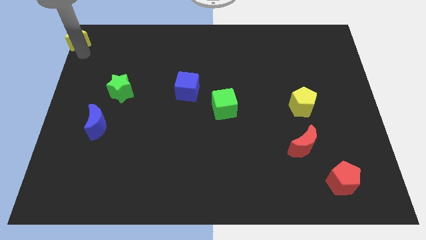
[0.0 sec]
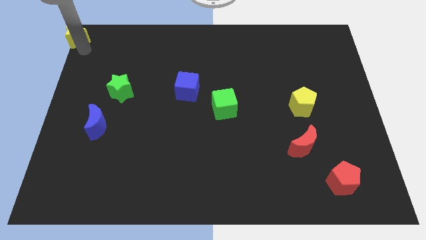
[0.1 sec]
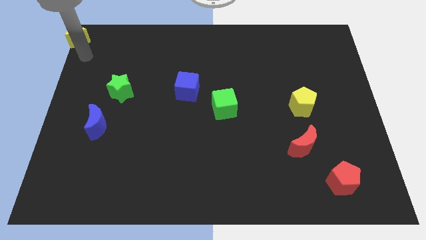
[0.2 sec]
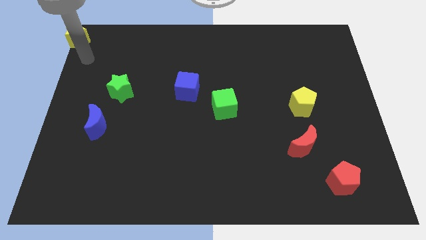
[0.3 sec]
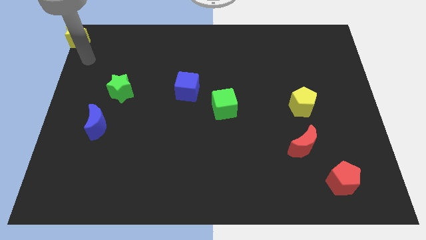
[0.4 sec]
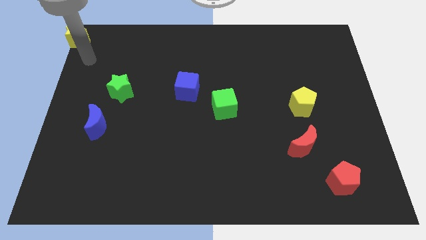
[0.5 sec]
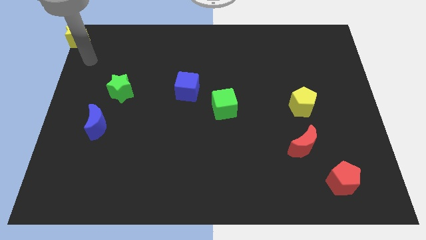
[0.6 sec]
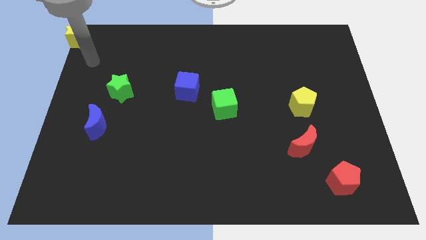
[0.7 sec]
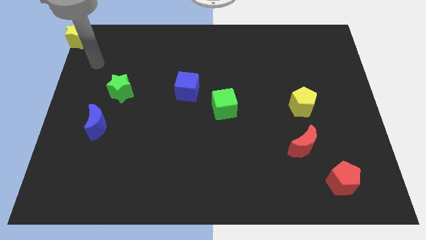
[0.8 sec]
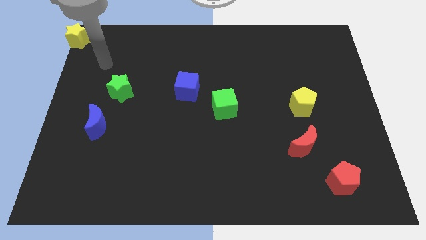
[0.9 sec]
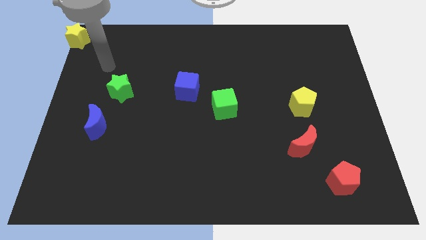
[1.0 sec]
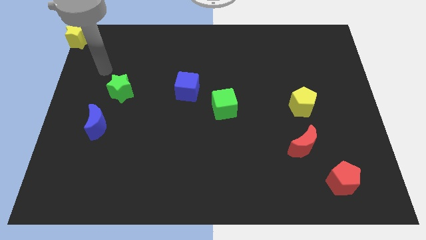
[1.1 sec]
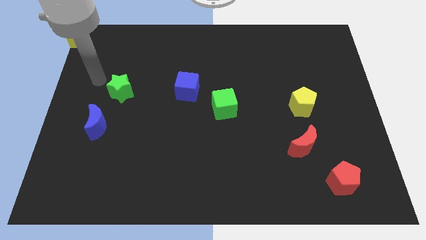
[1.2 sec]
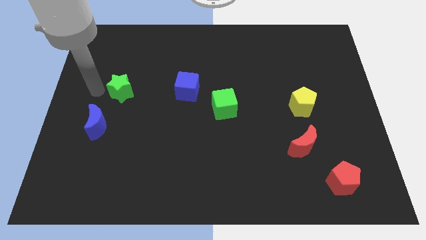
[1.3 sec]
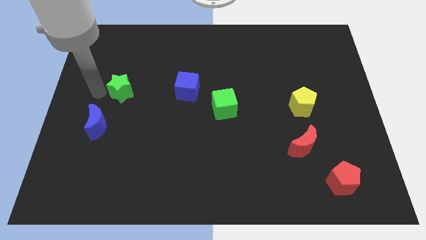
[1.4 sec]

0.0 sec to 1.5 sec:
move your arm away from the yellow star

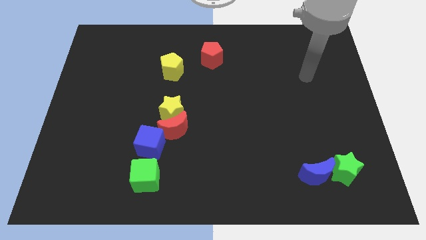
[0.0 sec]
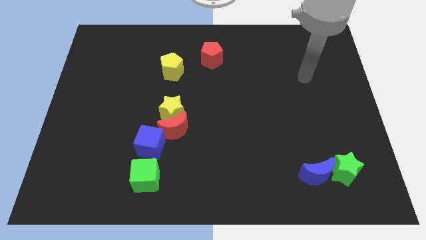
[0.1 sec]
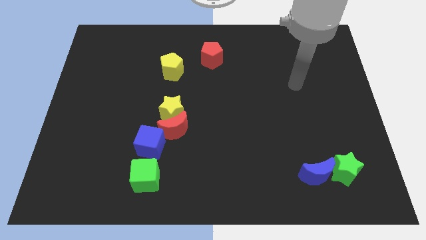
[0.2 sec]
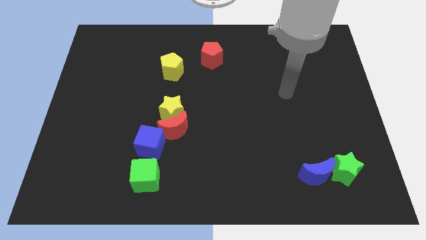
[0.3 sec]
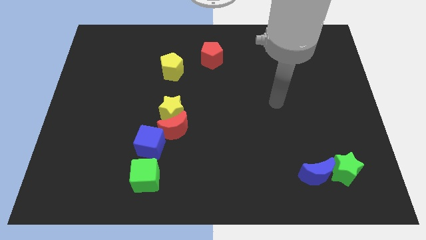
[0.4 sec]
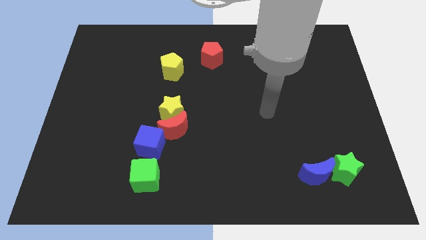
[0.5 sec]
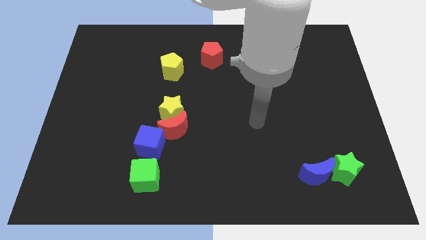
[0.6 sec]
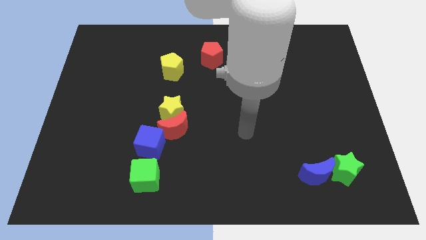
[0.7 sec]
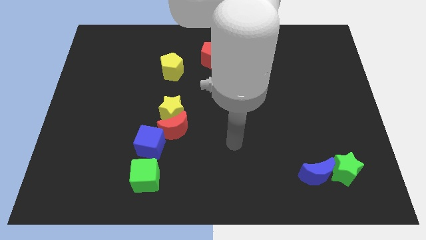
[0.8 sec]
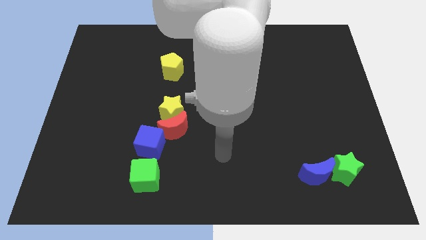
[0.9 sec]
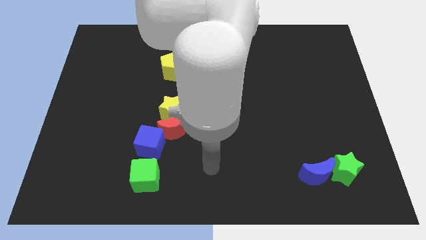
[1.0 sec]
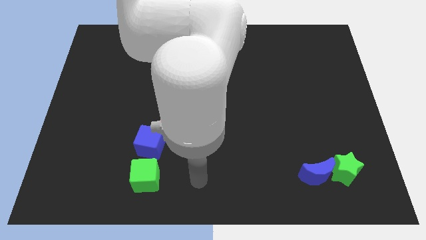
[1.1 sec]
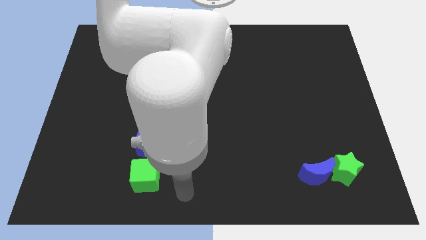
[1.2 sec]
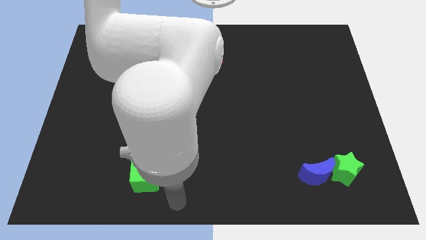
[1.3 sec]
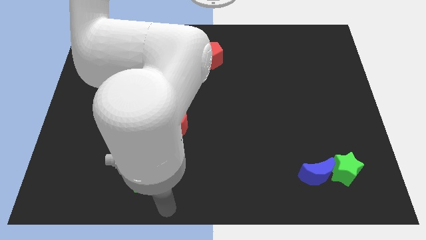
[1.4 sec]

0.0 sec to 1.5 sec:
move your arm towards the bottom side of the board

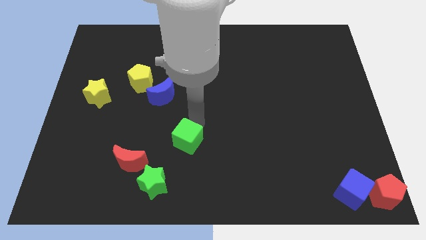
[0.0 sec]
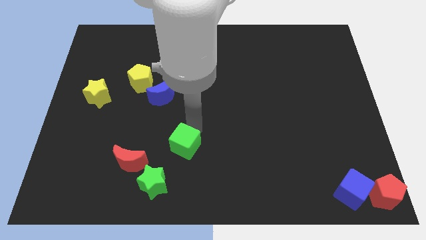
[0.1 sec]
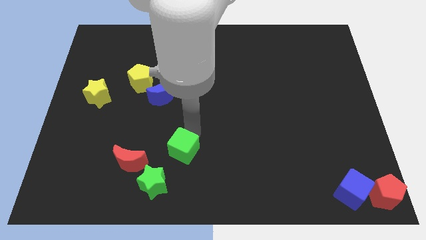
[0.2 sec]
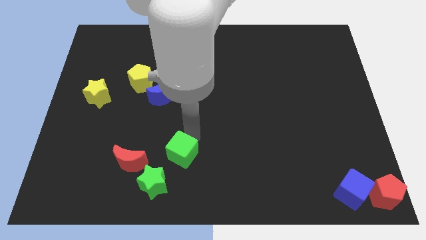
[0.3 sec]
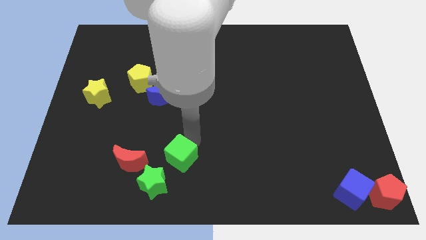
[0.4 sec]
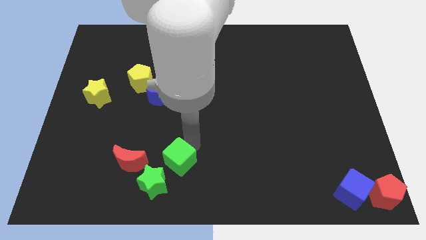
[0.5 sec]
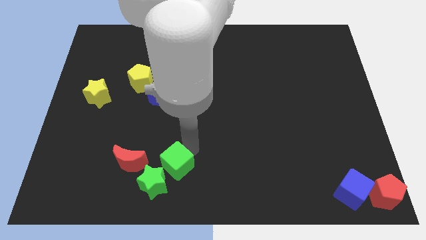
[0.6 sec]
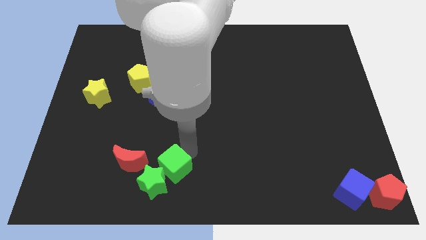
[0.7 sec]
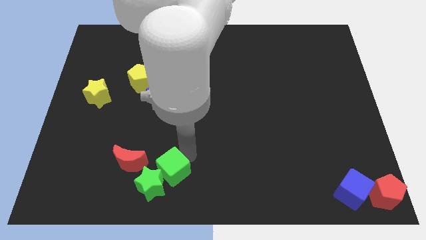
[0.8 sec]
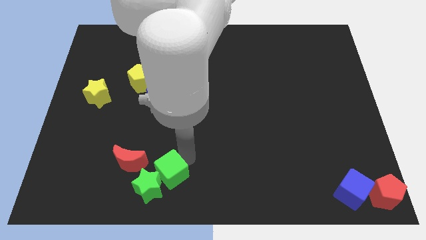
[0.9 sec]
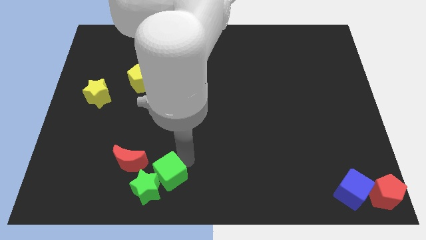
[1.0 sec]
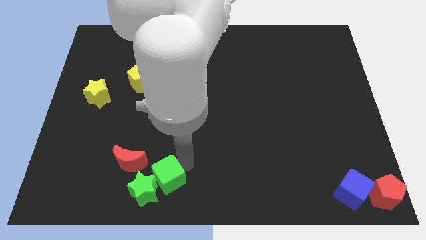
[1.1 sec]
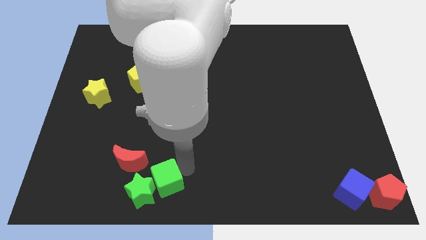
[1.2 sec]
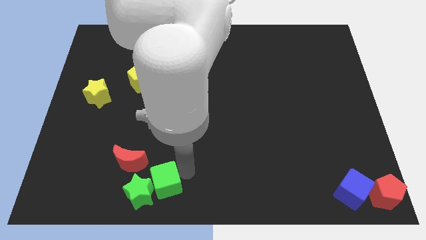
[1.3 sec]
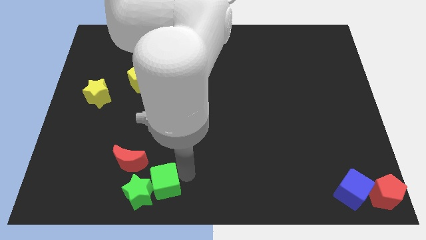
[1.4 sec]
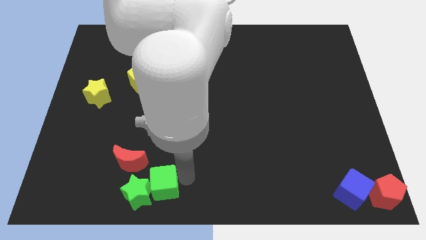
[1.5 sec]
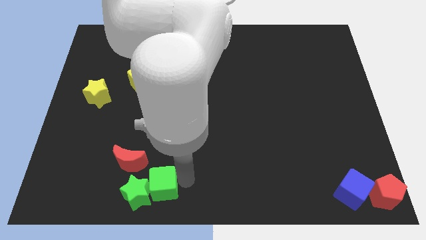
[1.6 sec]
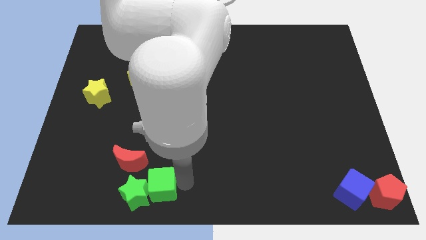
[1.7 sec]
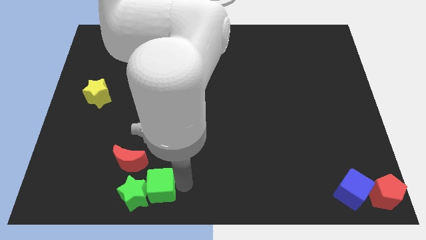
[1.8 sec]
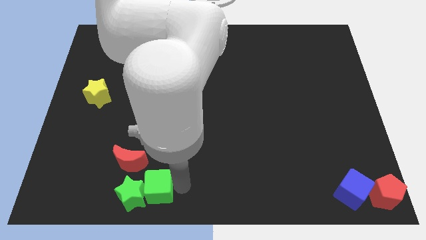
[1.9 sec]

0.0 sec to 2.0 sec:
push the green cube into the green star

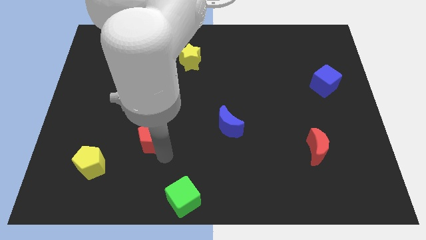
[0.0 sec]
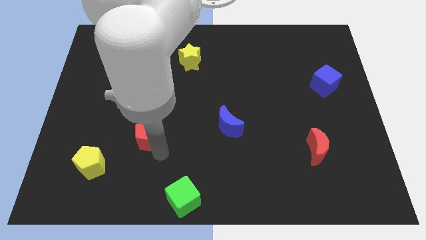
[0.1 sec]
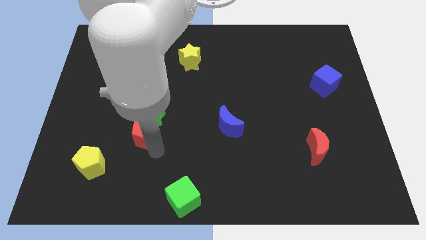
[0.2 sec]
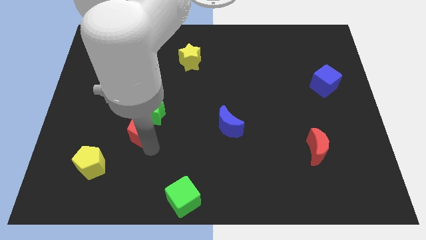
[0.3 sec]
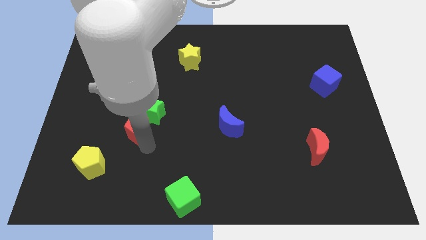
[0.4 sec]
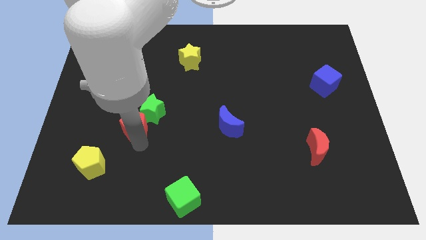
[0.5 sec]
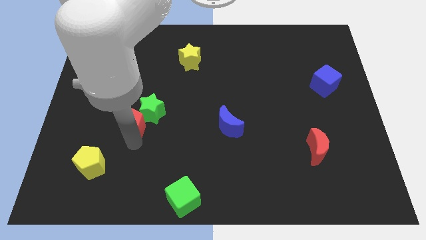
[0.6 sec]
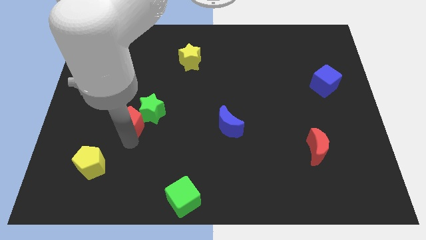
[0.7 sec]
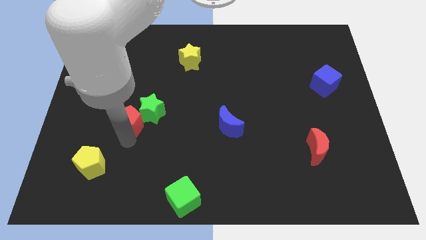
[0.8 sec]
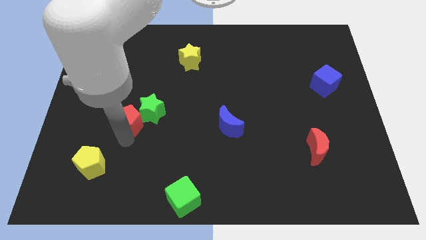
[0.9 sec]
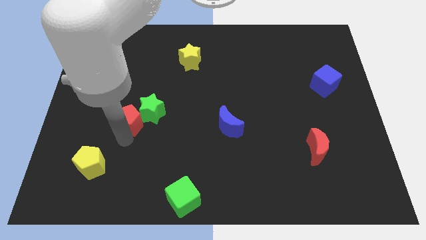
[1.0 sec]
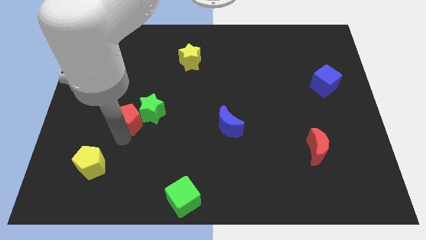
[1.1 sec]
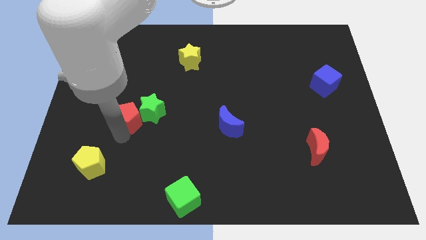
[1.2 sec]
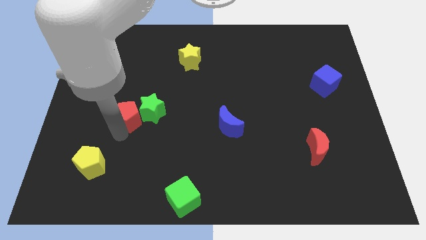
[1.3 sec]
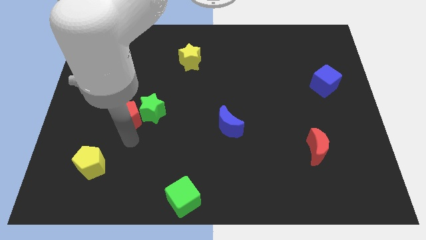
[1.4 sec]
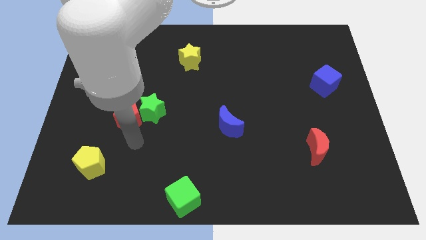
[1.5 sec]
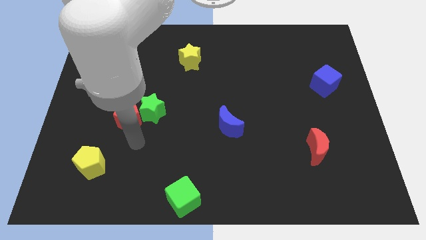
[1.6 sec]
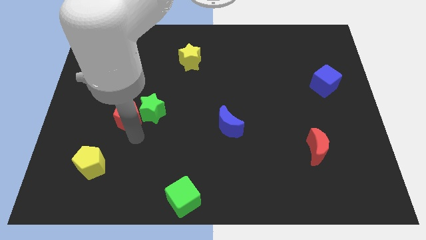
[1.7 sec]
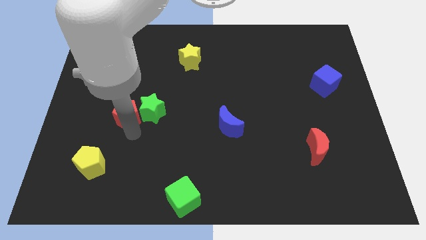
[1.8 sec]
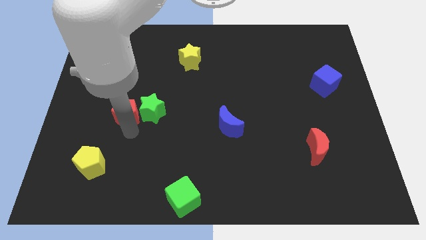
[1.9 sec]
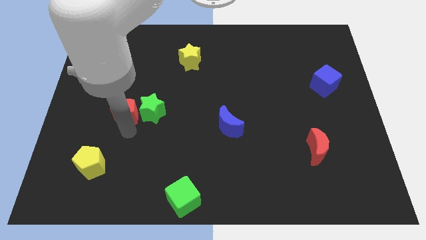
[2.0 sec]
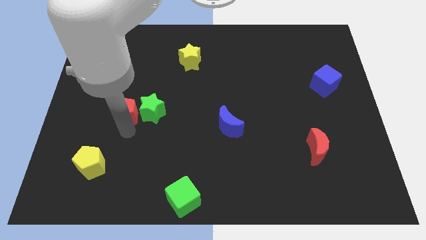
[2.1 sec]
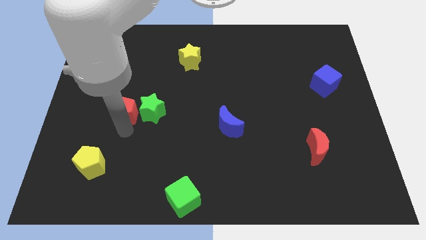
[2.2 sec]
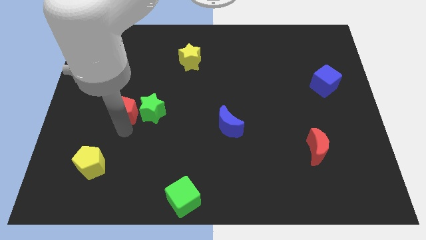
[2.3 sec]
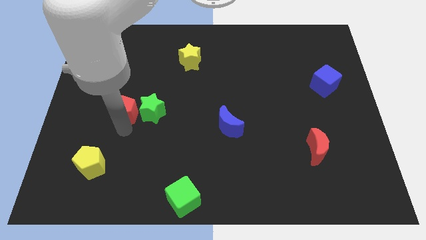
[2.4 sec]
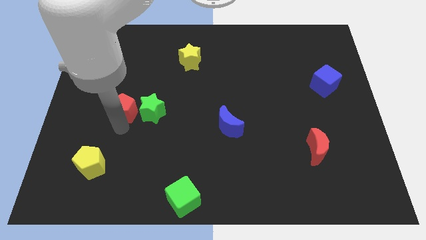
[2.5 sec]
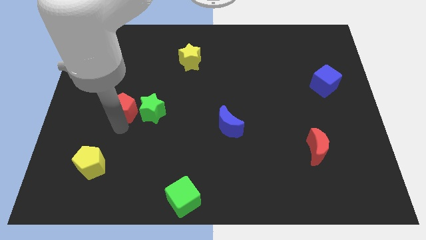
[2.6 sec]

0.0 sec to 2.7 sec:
place the red pentagon parallel to the green star

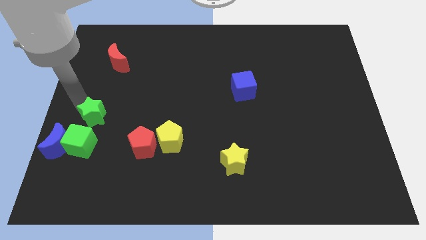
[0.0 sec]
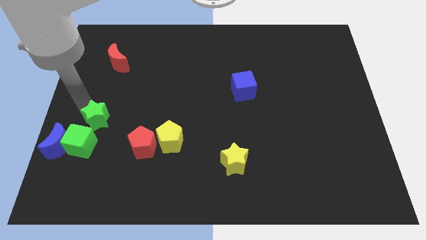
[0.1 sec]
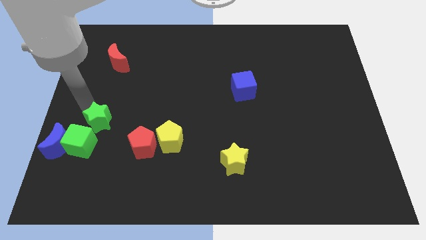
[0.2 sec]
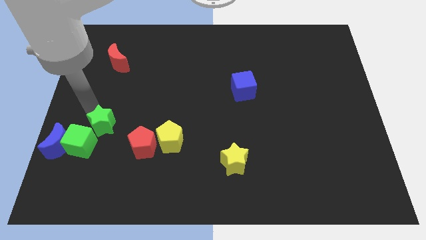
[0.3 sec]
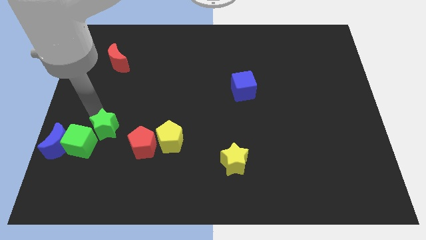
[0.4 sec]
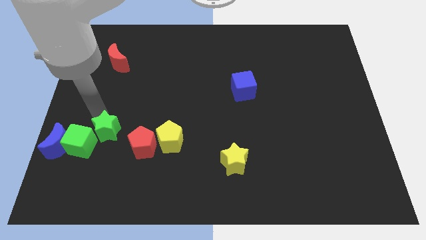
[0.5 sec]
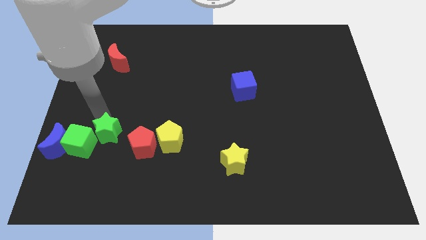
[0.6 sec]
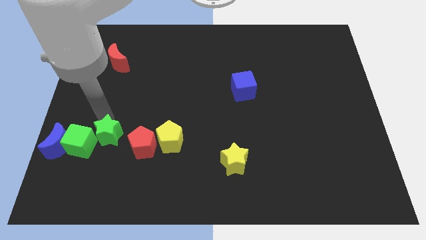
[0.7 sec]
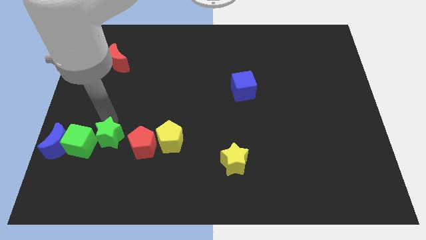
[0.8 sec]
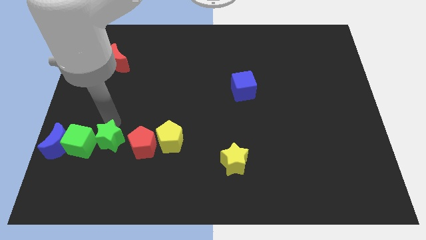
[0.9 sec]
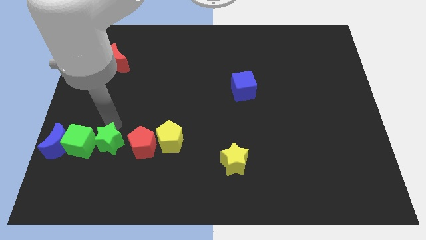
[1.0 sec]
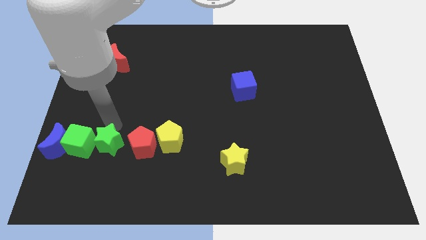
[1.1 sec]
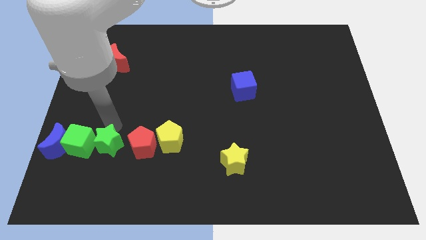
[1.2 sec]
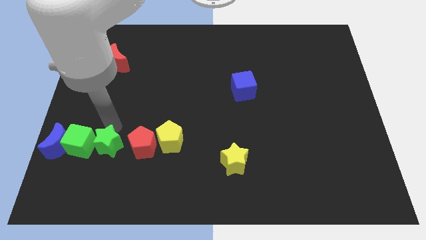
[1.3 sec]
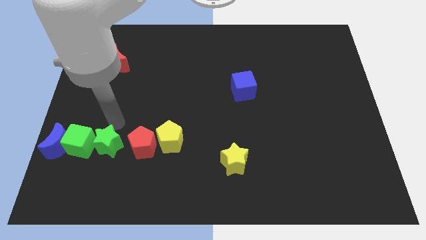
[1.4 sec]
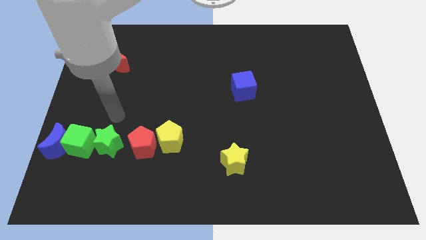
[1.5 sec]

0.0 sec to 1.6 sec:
move green star close to the green block
